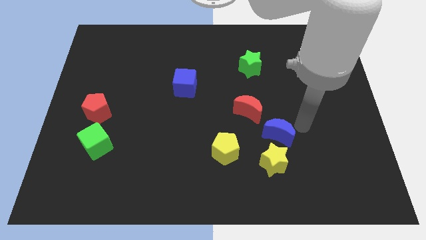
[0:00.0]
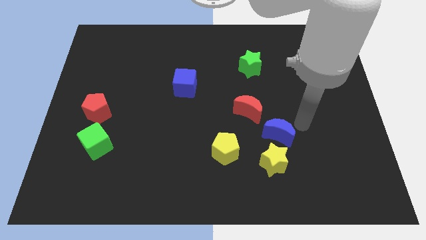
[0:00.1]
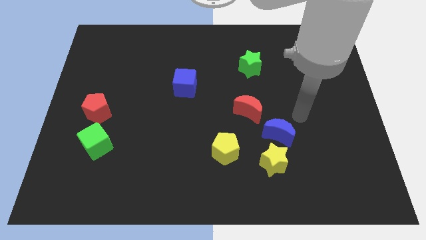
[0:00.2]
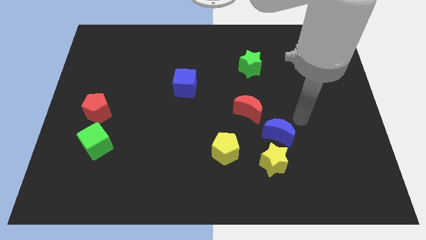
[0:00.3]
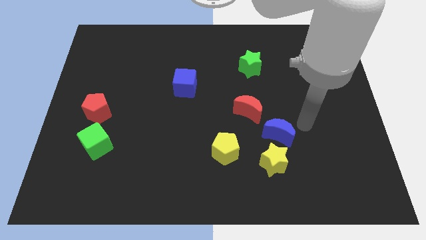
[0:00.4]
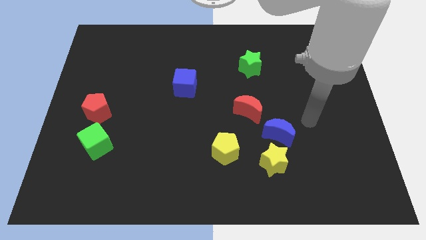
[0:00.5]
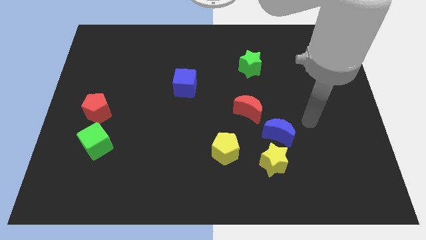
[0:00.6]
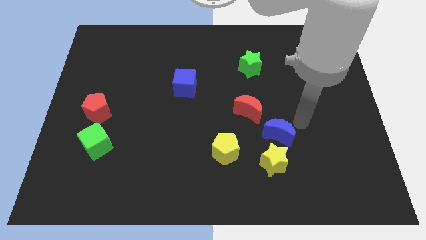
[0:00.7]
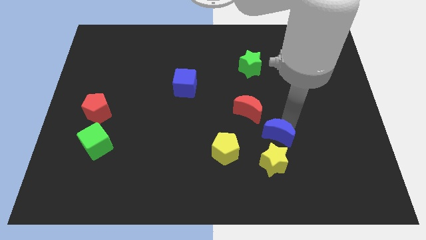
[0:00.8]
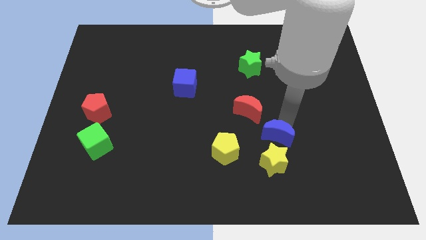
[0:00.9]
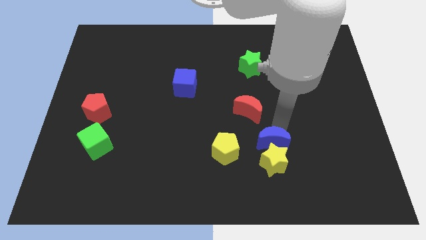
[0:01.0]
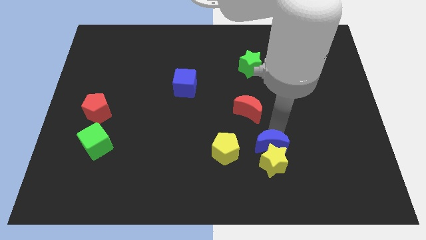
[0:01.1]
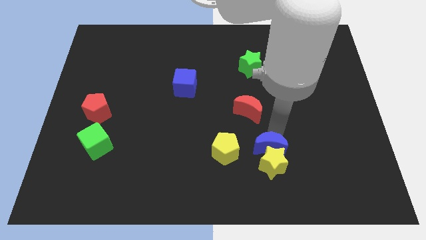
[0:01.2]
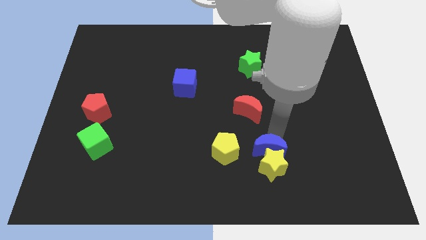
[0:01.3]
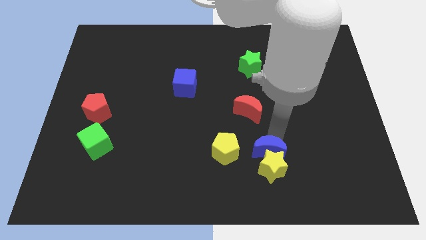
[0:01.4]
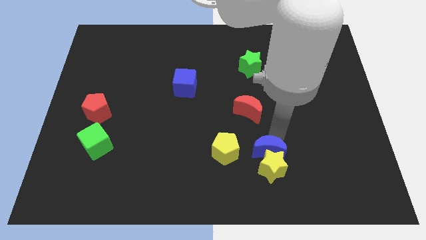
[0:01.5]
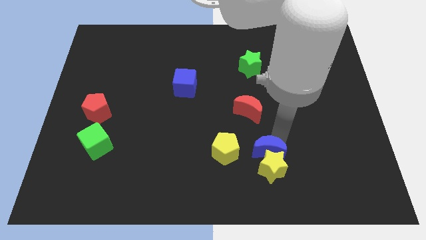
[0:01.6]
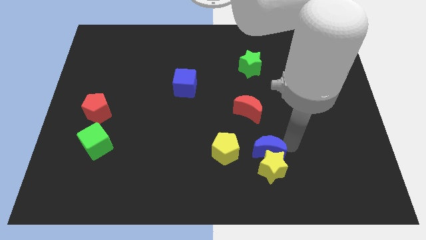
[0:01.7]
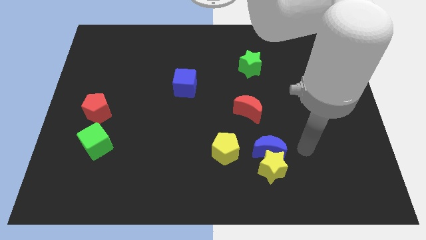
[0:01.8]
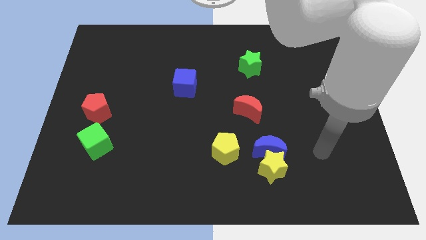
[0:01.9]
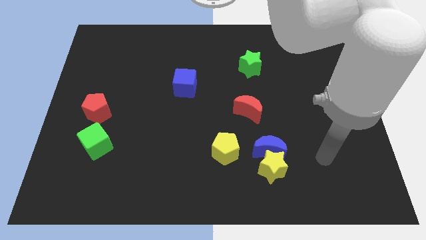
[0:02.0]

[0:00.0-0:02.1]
move the blue moon into the yellow star

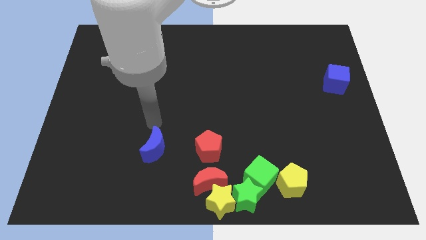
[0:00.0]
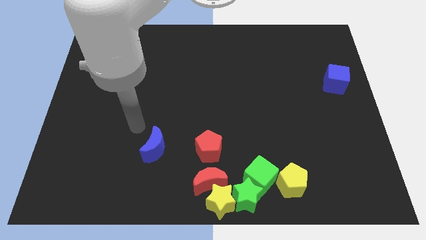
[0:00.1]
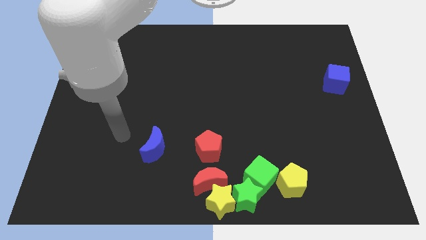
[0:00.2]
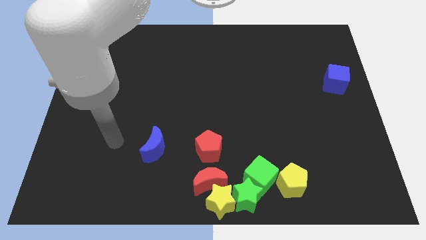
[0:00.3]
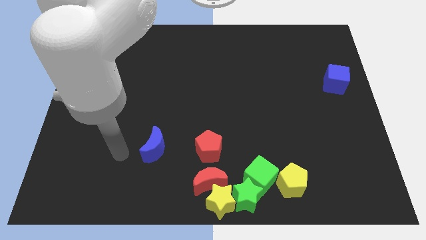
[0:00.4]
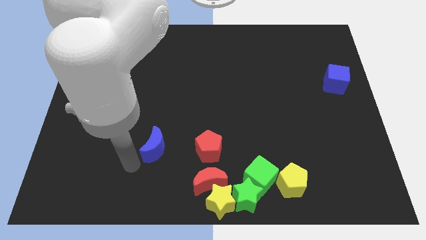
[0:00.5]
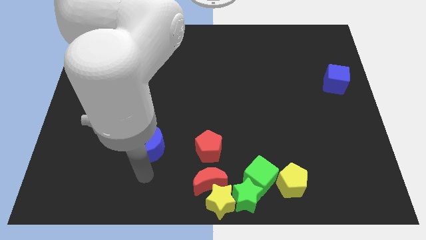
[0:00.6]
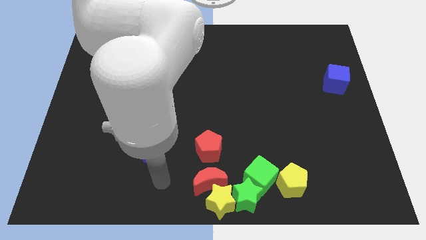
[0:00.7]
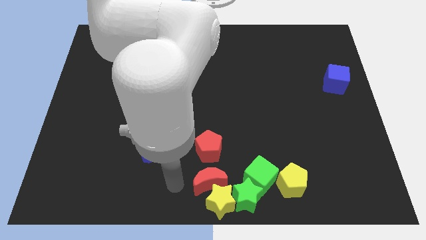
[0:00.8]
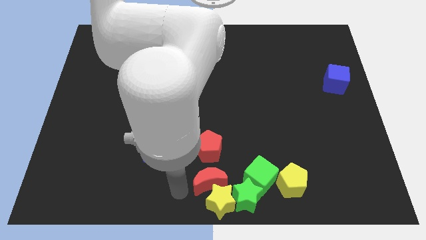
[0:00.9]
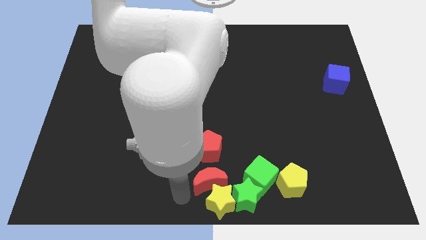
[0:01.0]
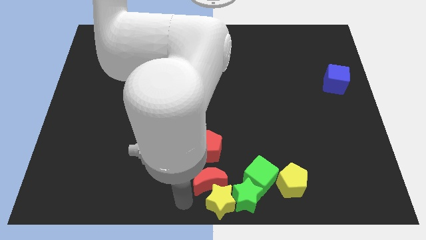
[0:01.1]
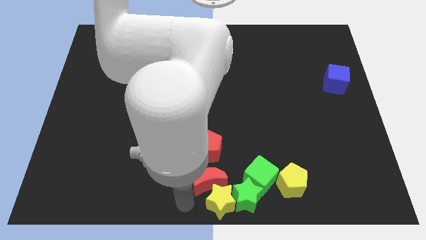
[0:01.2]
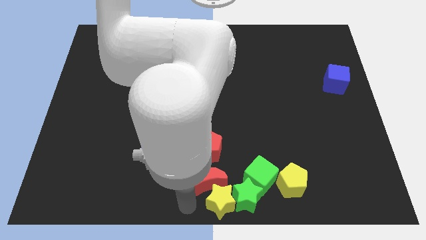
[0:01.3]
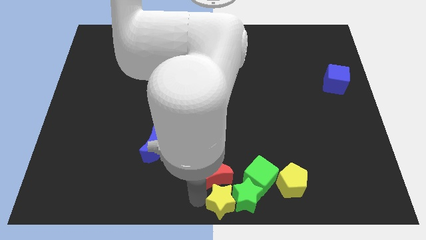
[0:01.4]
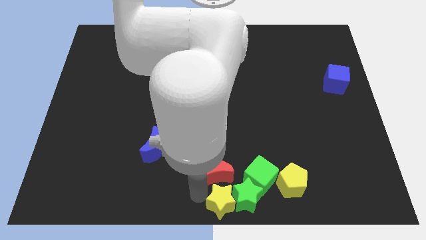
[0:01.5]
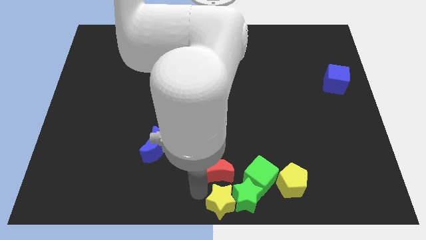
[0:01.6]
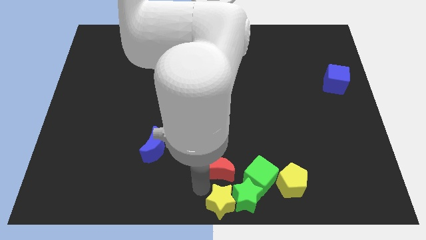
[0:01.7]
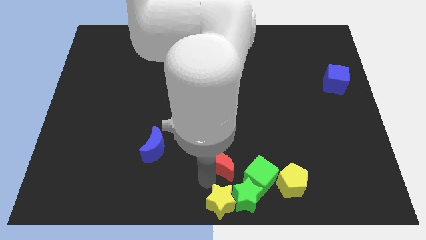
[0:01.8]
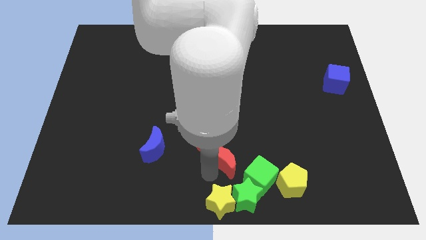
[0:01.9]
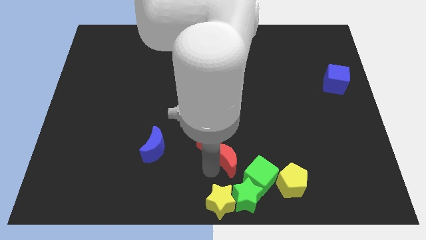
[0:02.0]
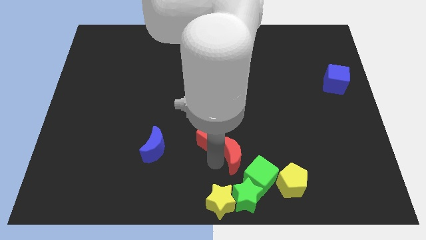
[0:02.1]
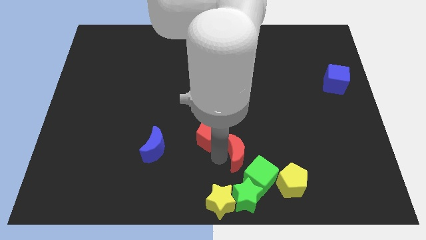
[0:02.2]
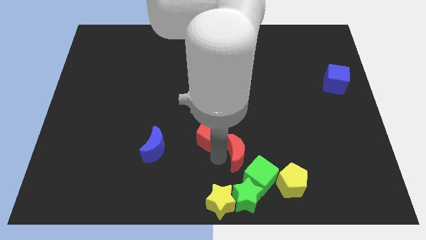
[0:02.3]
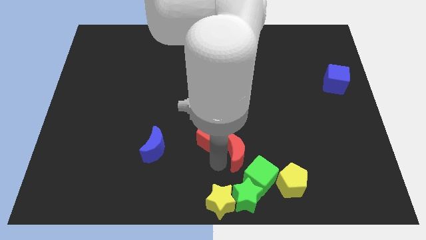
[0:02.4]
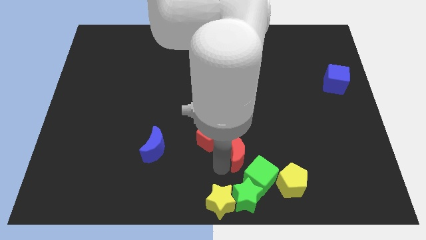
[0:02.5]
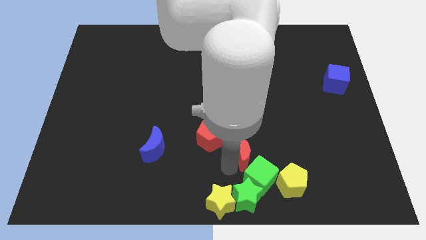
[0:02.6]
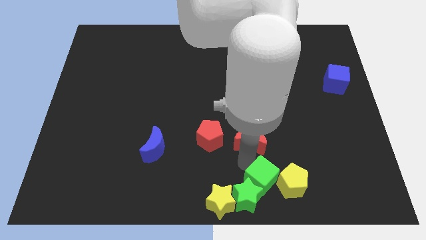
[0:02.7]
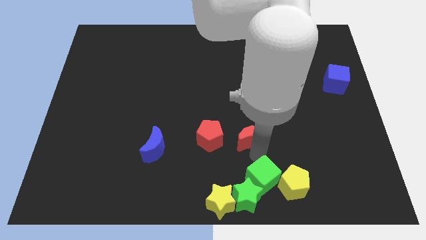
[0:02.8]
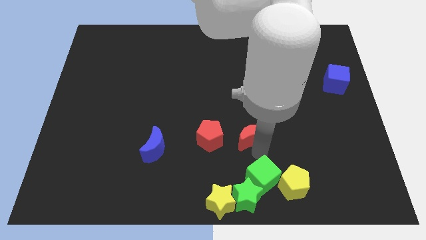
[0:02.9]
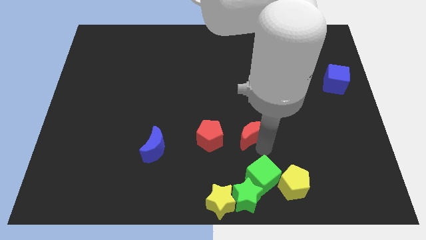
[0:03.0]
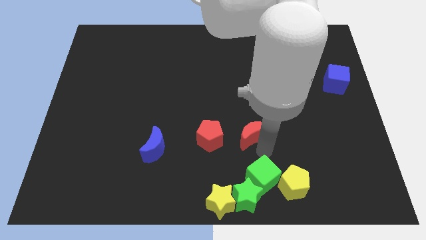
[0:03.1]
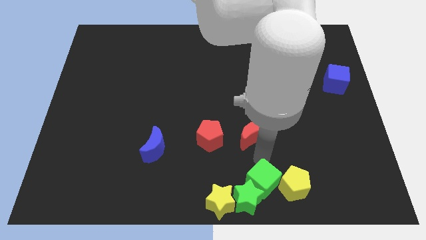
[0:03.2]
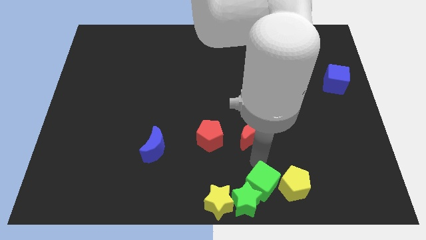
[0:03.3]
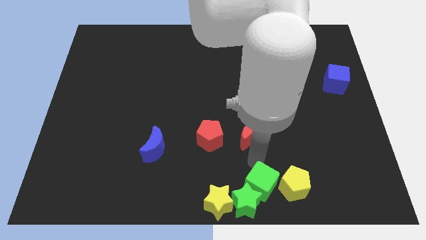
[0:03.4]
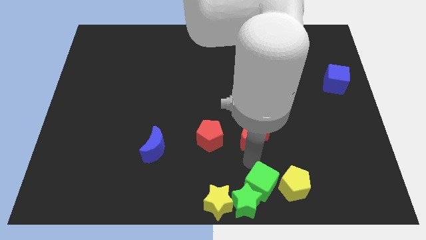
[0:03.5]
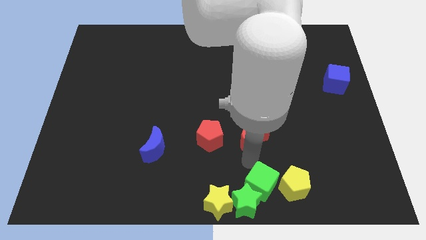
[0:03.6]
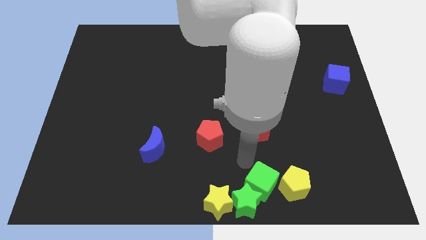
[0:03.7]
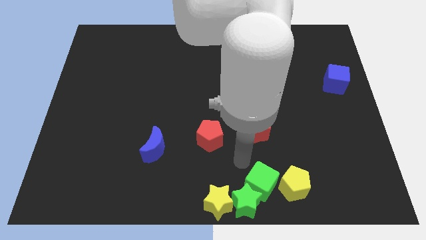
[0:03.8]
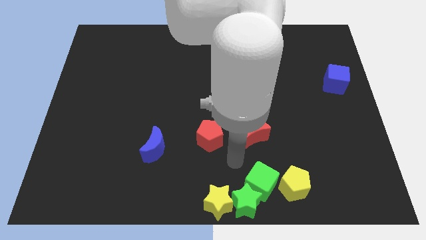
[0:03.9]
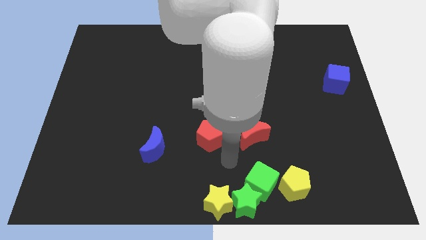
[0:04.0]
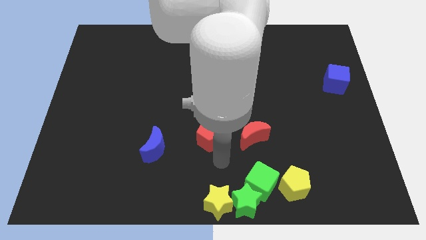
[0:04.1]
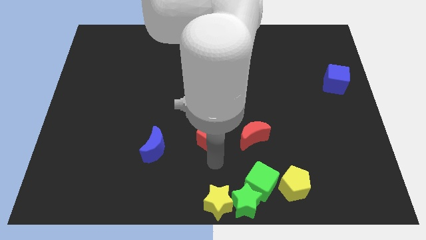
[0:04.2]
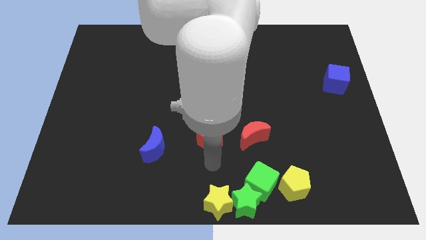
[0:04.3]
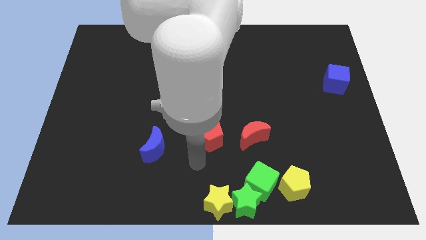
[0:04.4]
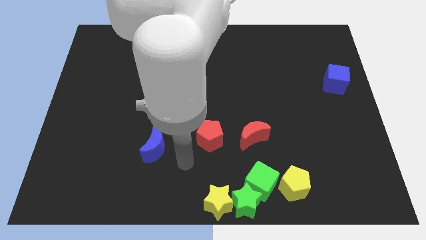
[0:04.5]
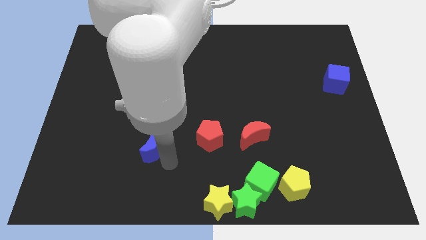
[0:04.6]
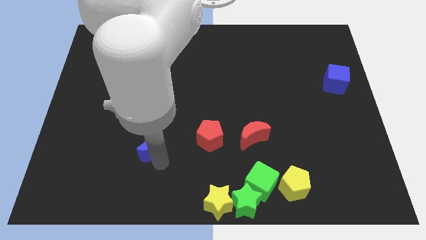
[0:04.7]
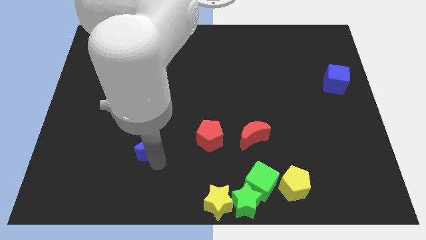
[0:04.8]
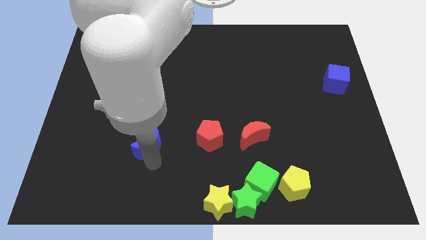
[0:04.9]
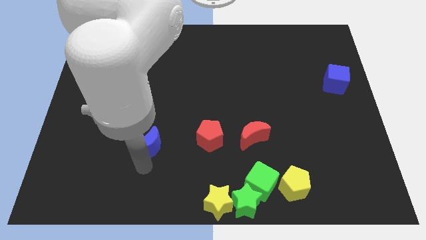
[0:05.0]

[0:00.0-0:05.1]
place the red moon above the green cube

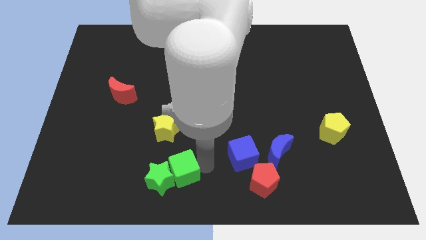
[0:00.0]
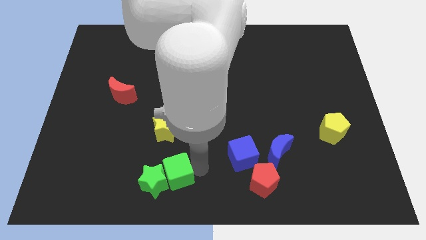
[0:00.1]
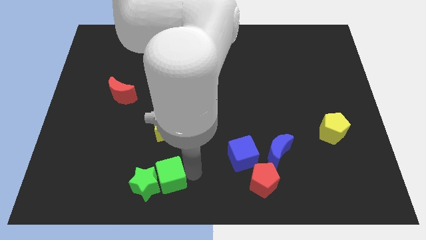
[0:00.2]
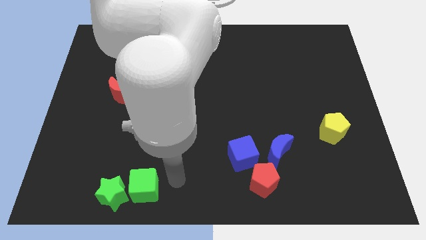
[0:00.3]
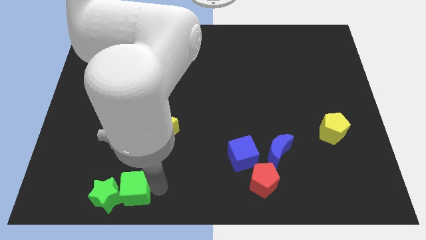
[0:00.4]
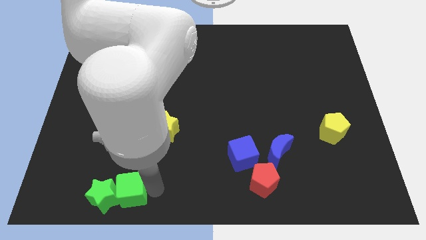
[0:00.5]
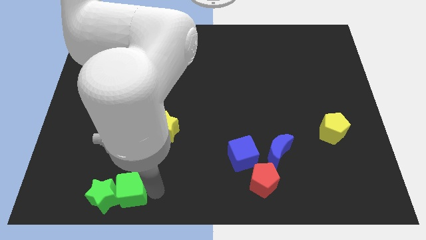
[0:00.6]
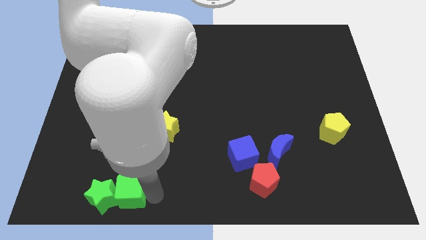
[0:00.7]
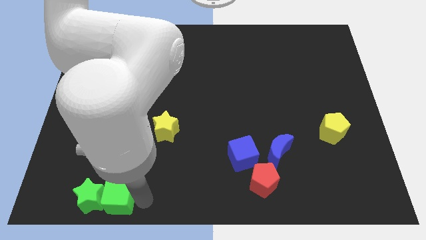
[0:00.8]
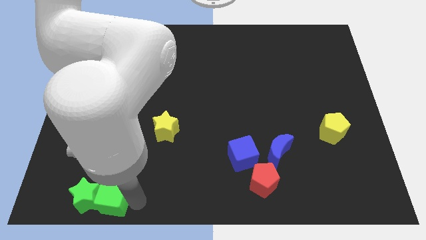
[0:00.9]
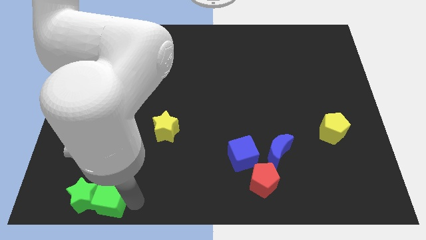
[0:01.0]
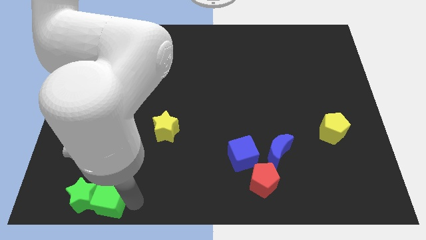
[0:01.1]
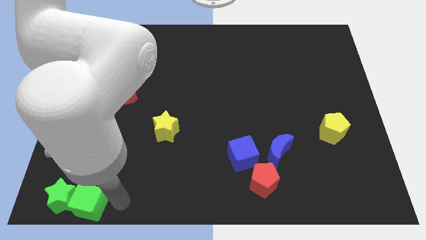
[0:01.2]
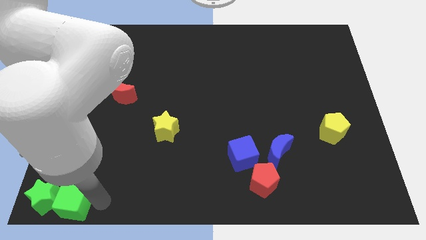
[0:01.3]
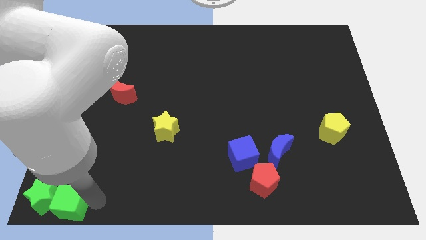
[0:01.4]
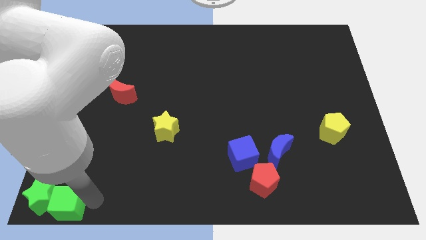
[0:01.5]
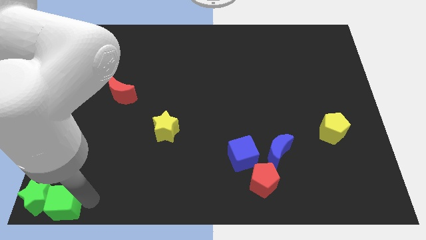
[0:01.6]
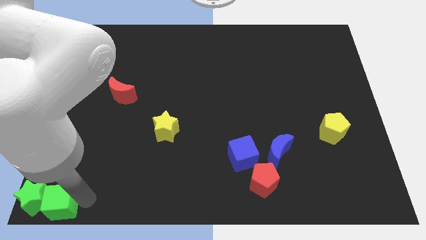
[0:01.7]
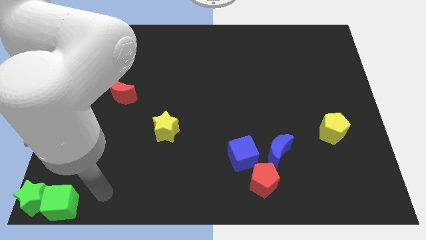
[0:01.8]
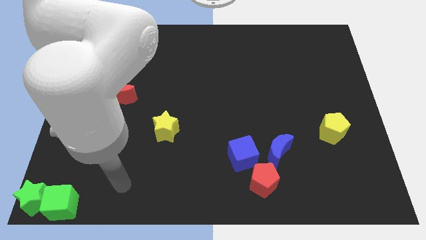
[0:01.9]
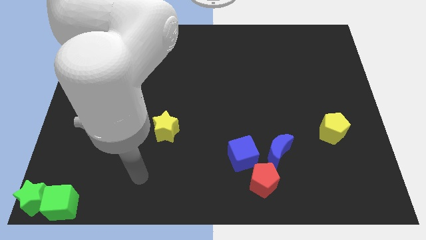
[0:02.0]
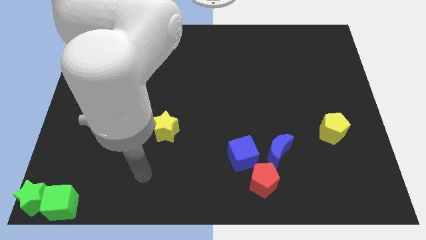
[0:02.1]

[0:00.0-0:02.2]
push the green blocks to the bottom left corner
